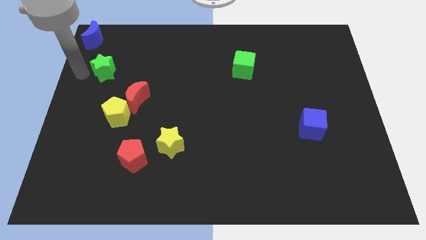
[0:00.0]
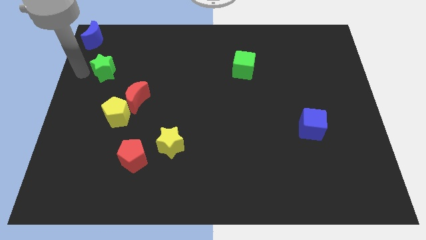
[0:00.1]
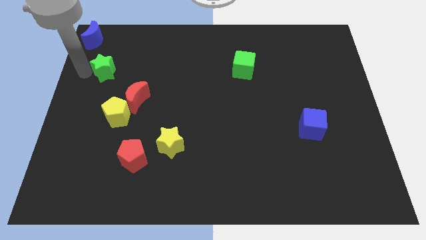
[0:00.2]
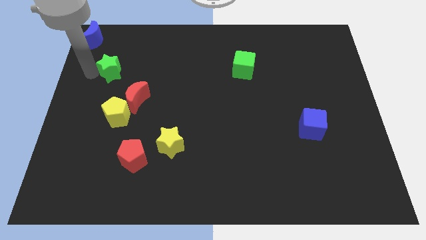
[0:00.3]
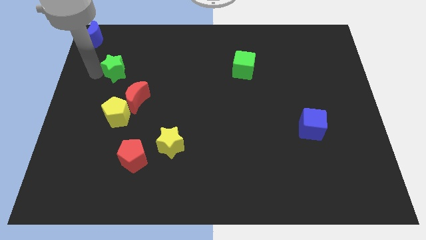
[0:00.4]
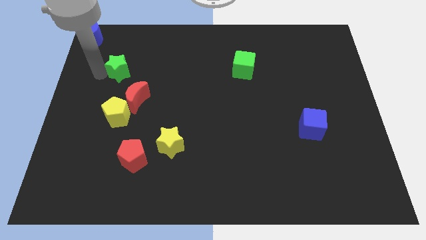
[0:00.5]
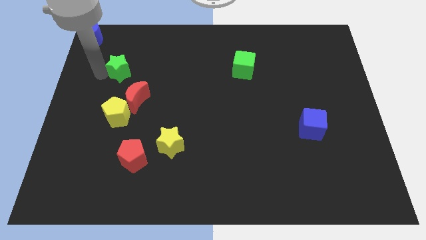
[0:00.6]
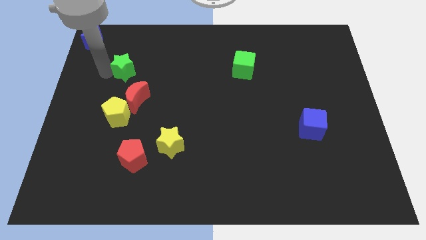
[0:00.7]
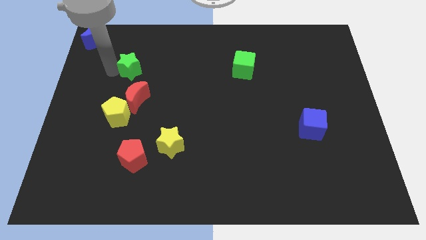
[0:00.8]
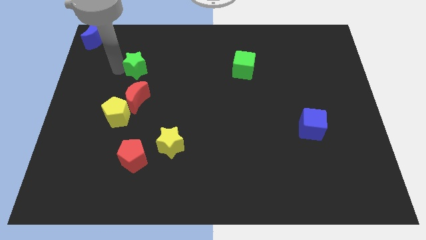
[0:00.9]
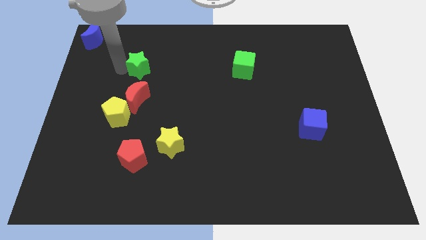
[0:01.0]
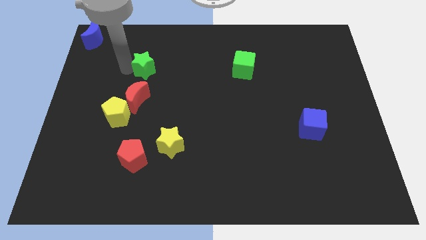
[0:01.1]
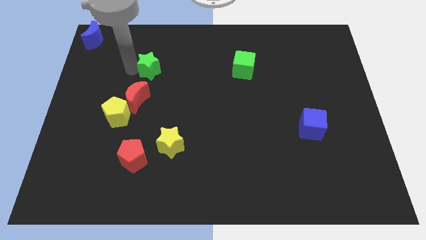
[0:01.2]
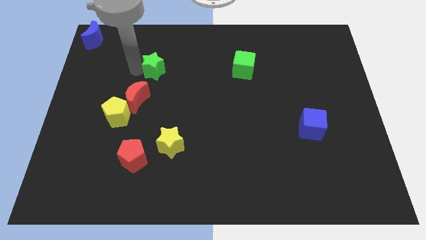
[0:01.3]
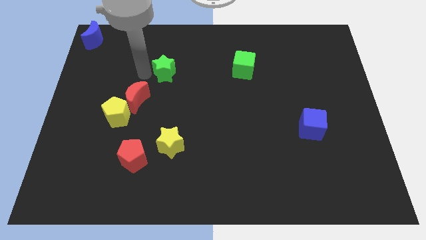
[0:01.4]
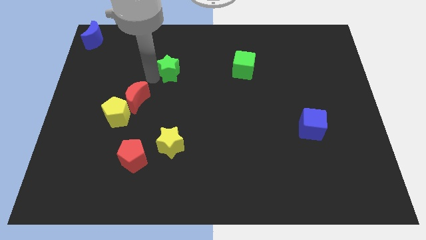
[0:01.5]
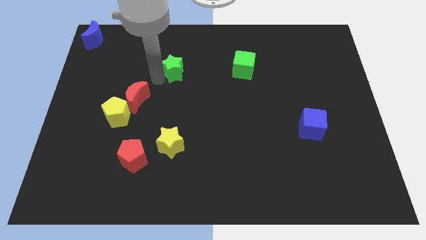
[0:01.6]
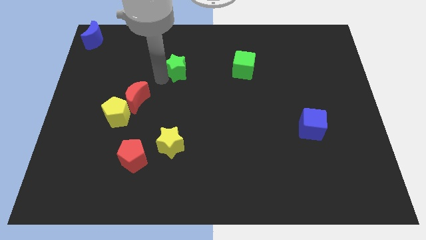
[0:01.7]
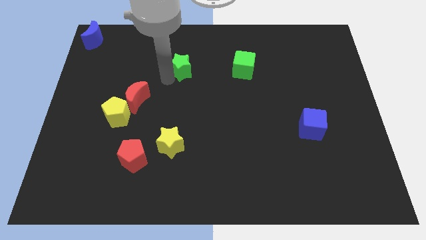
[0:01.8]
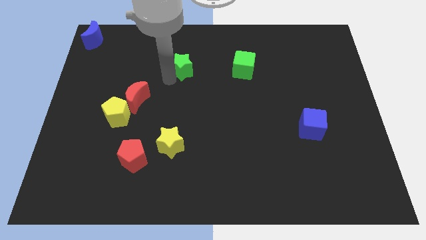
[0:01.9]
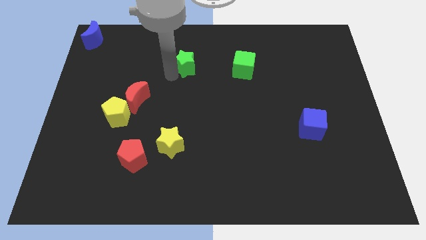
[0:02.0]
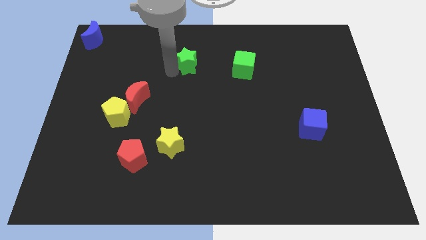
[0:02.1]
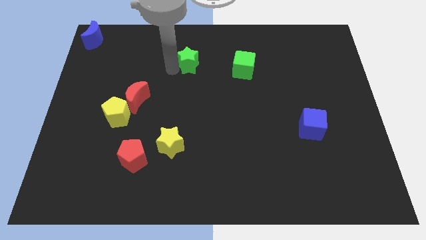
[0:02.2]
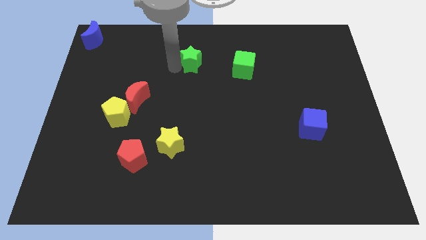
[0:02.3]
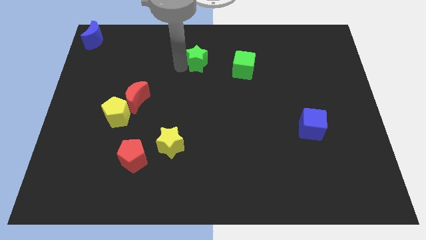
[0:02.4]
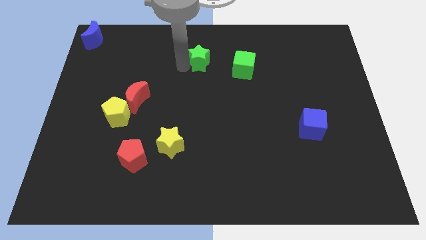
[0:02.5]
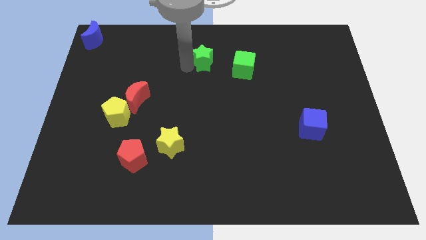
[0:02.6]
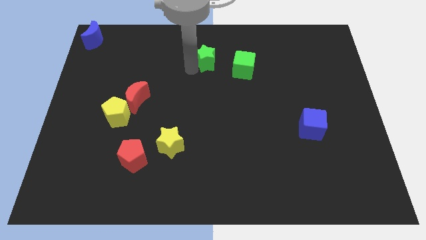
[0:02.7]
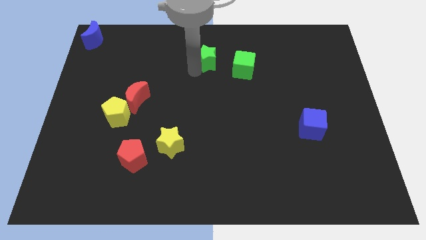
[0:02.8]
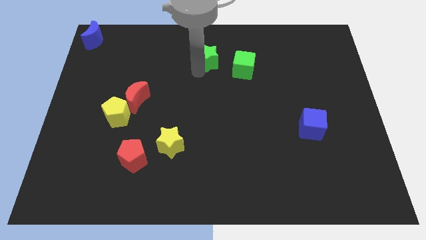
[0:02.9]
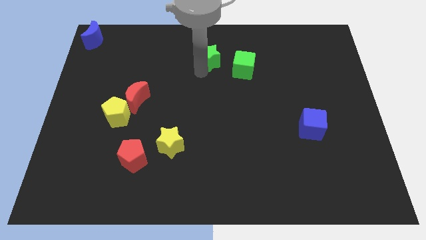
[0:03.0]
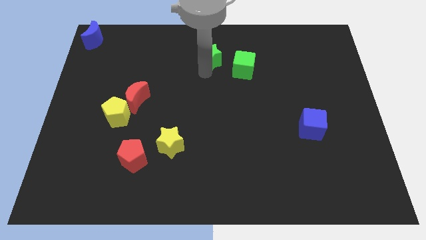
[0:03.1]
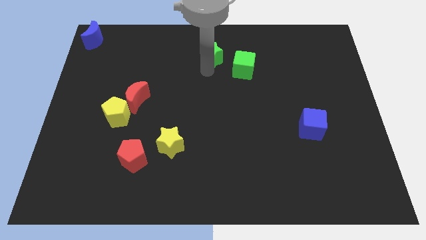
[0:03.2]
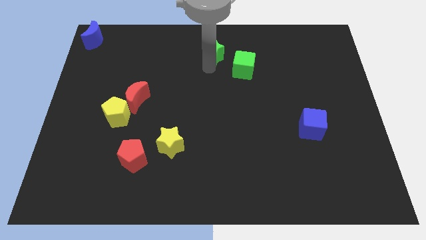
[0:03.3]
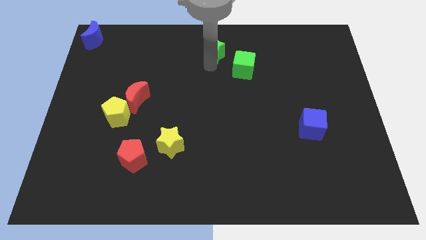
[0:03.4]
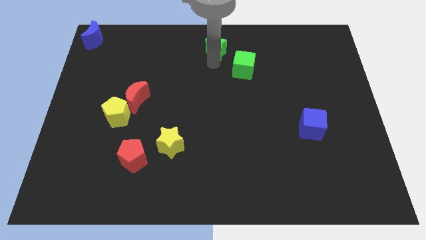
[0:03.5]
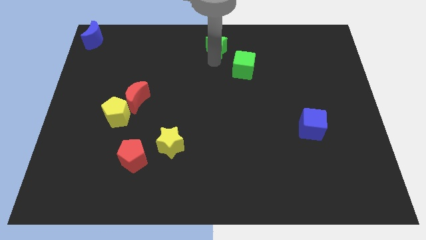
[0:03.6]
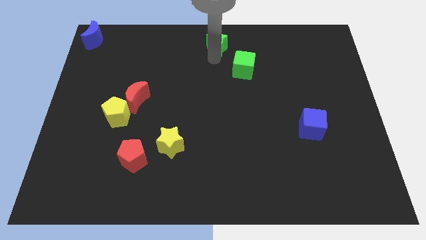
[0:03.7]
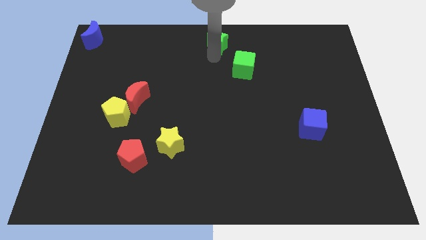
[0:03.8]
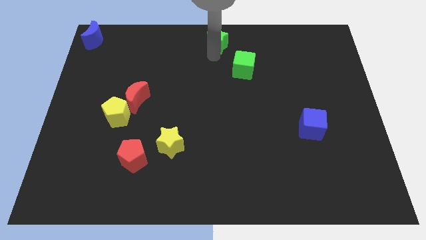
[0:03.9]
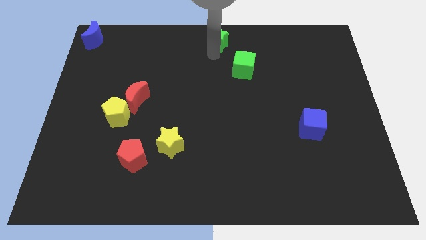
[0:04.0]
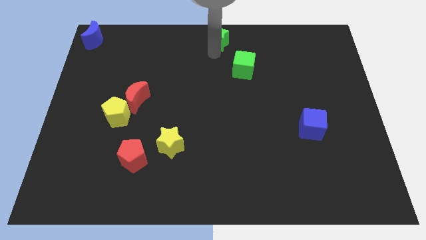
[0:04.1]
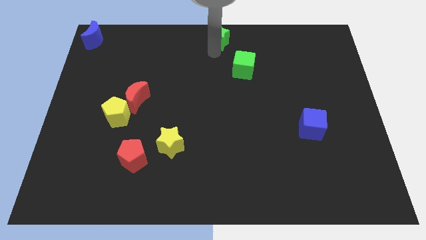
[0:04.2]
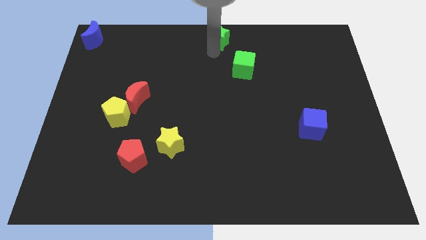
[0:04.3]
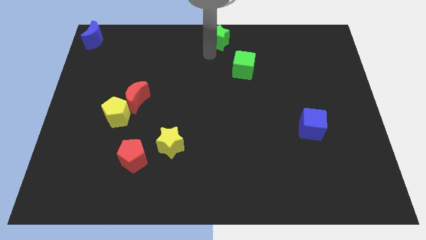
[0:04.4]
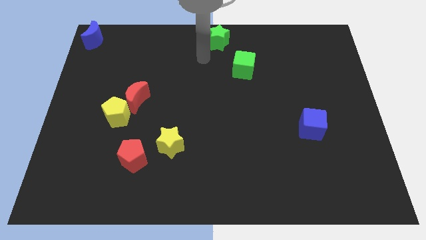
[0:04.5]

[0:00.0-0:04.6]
push green star to the top center

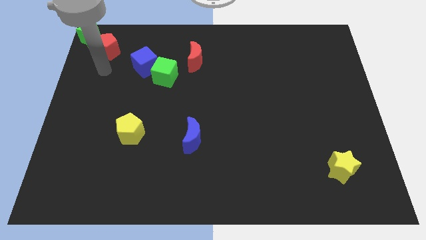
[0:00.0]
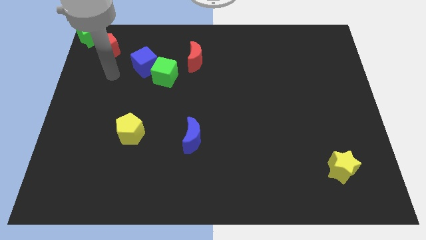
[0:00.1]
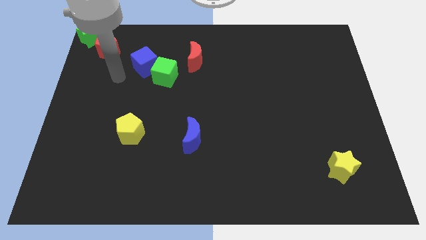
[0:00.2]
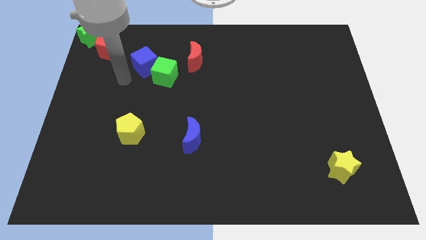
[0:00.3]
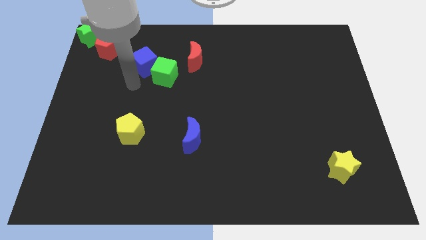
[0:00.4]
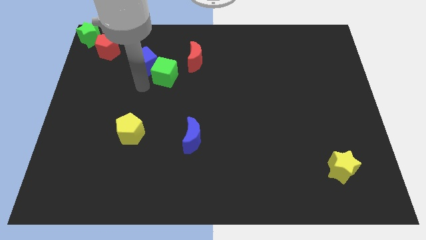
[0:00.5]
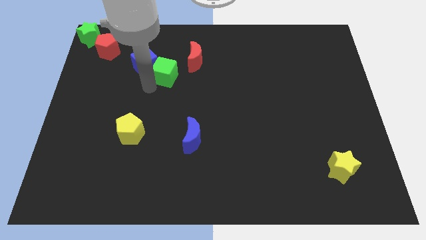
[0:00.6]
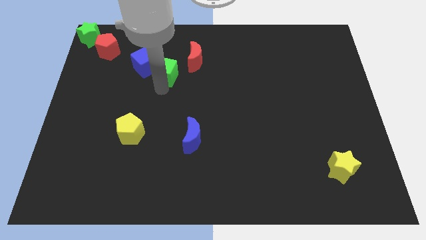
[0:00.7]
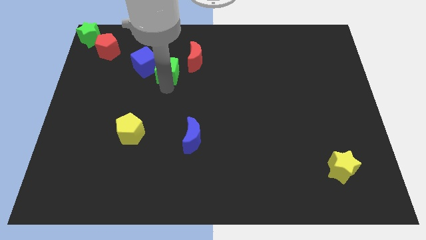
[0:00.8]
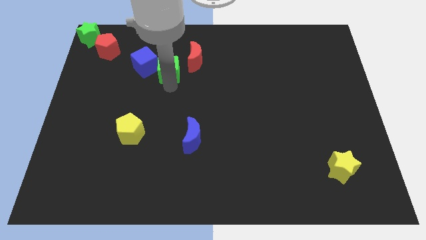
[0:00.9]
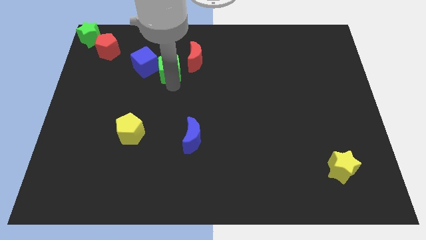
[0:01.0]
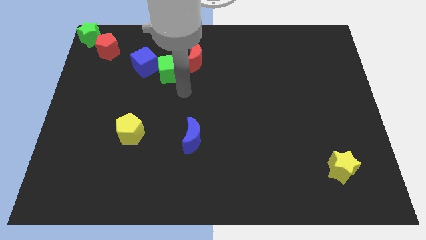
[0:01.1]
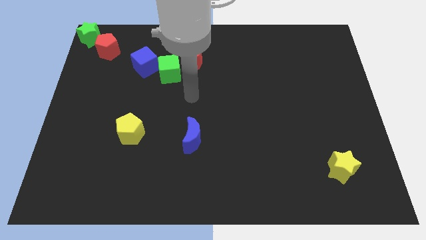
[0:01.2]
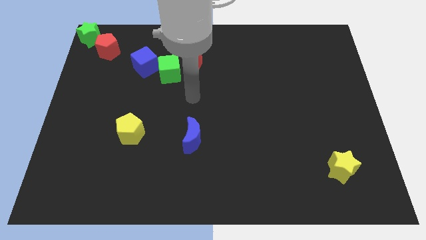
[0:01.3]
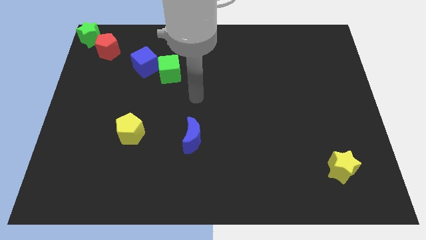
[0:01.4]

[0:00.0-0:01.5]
touch green cube slightly

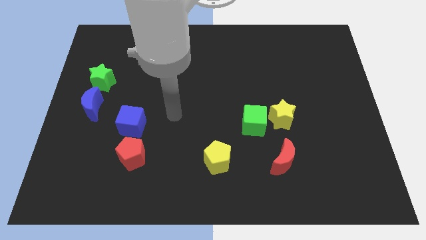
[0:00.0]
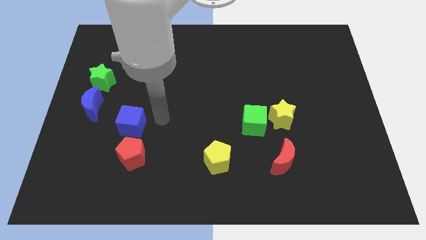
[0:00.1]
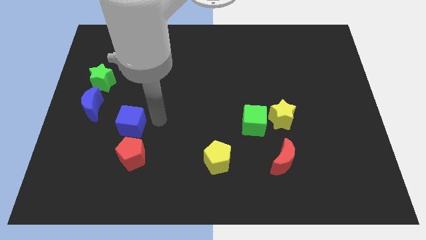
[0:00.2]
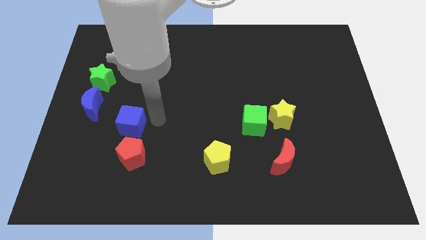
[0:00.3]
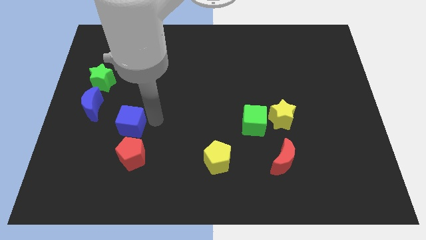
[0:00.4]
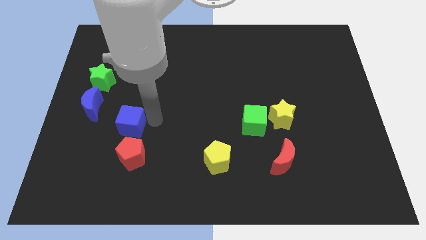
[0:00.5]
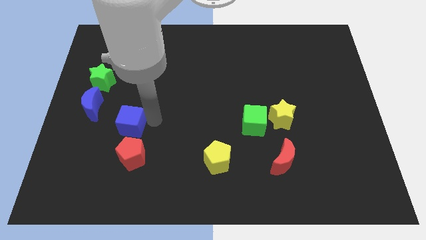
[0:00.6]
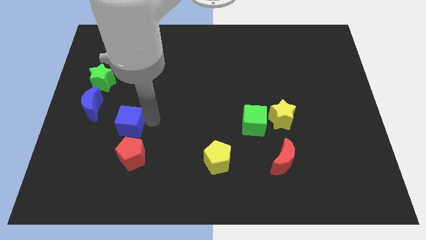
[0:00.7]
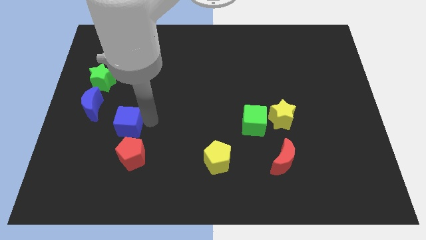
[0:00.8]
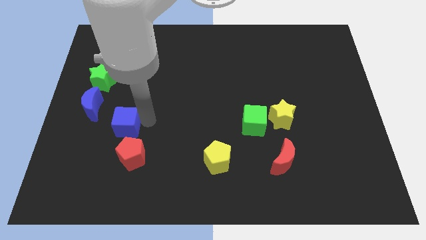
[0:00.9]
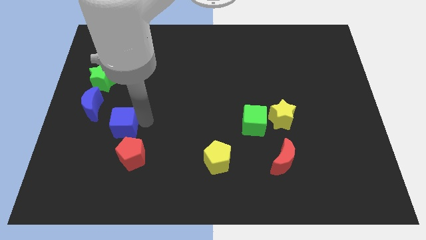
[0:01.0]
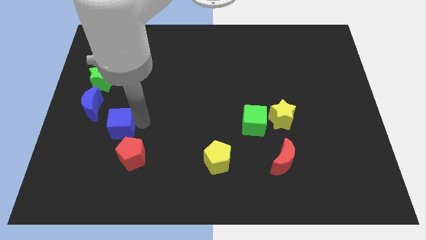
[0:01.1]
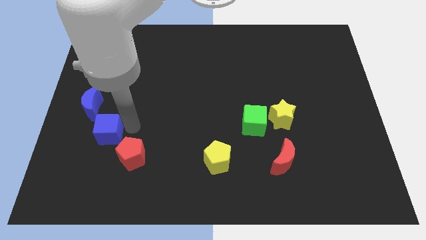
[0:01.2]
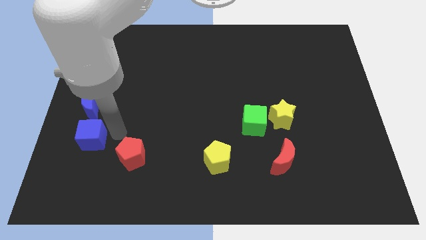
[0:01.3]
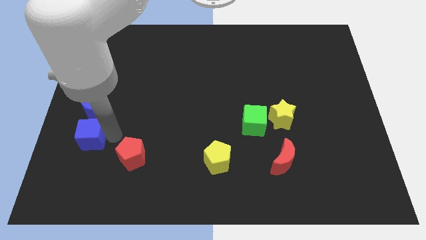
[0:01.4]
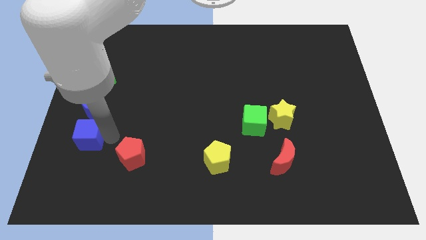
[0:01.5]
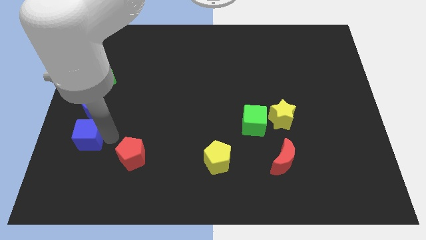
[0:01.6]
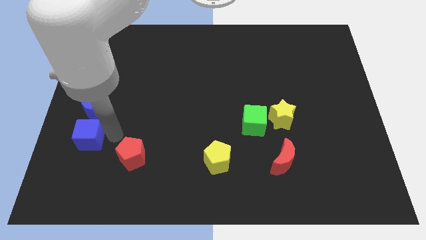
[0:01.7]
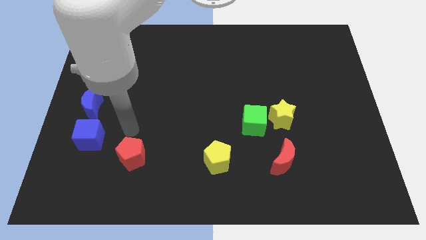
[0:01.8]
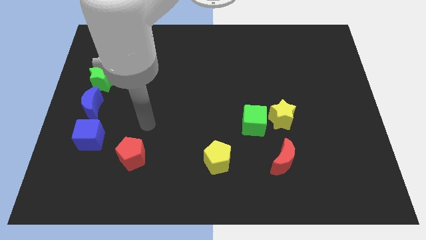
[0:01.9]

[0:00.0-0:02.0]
move the blue cube to the bottom side of the blue moon

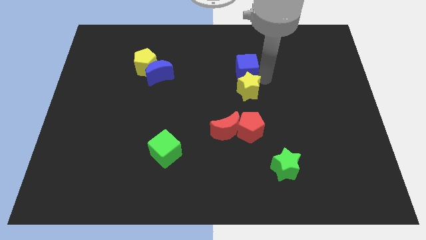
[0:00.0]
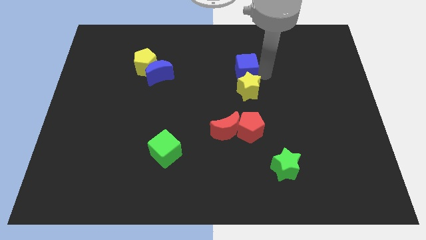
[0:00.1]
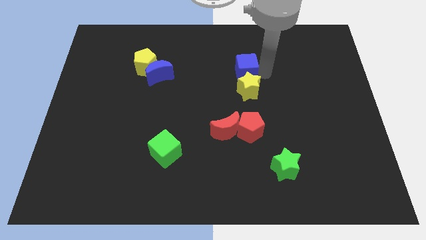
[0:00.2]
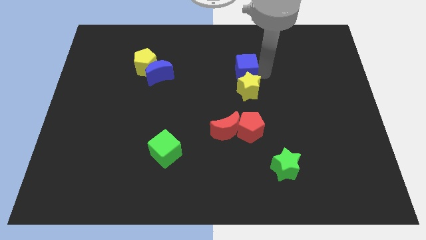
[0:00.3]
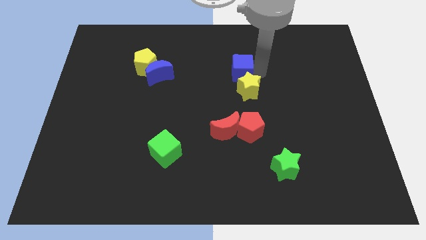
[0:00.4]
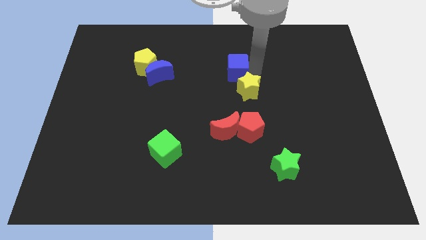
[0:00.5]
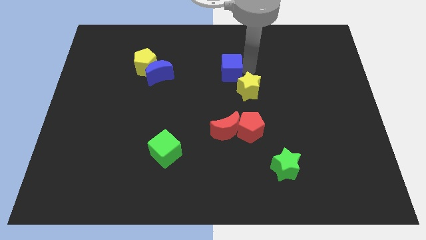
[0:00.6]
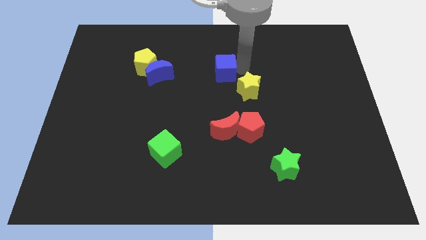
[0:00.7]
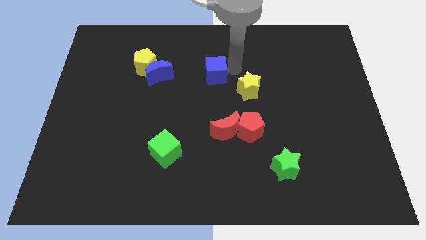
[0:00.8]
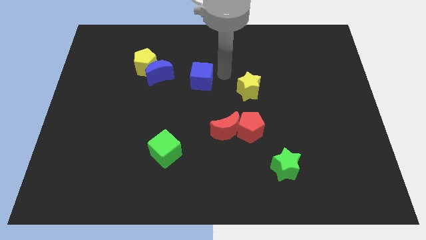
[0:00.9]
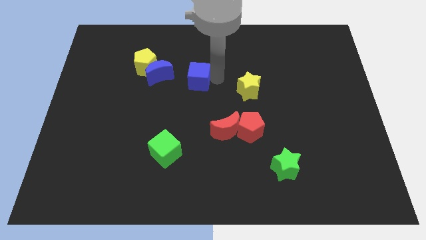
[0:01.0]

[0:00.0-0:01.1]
separate the blue cube from yellow star
